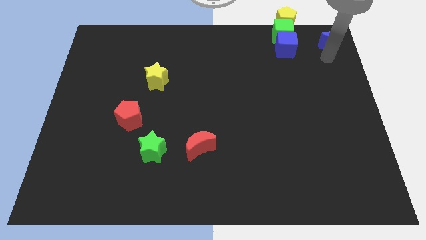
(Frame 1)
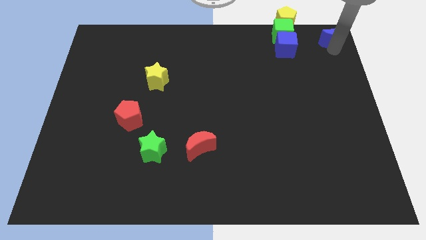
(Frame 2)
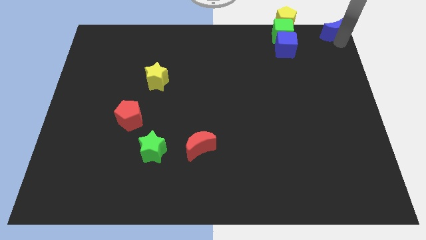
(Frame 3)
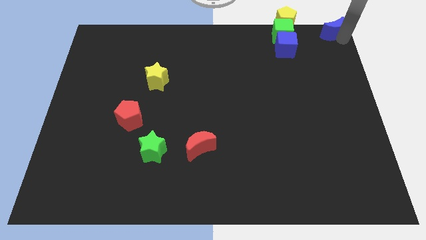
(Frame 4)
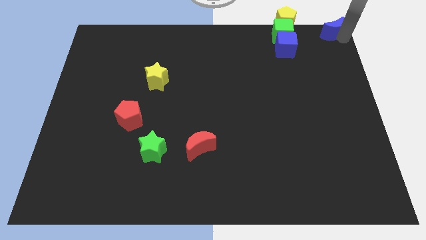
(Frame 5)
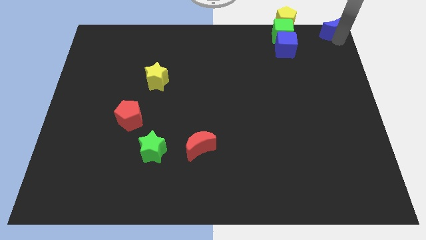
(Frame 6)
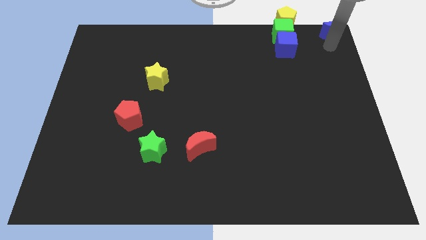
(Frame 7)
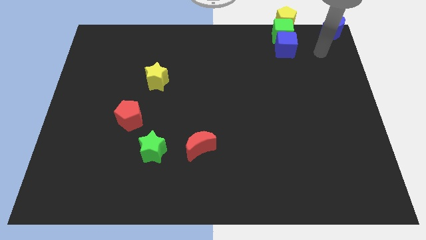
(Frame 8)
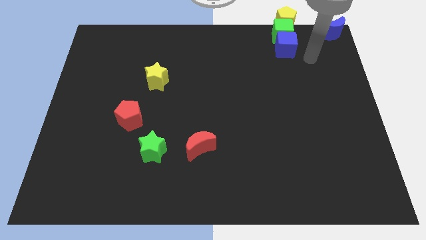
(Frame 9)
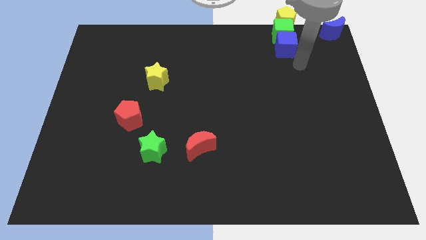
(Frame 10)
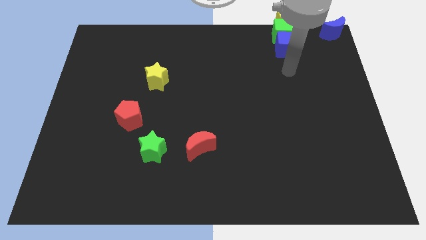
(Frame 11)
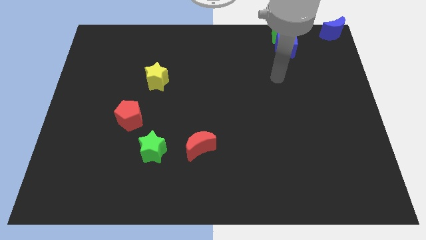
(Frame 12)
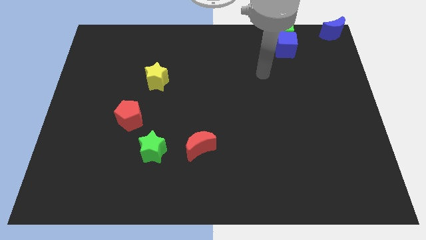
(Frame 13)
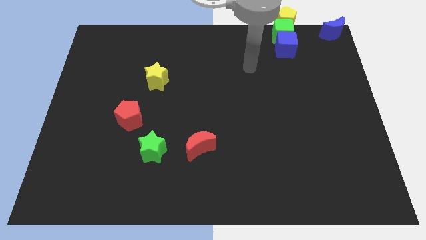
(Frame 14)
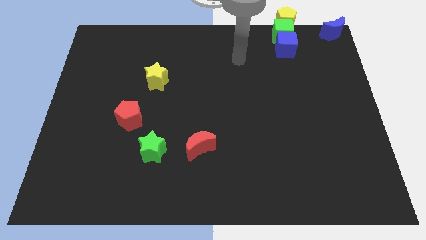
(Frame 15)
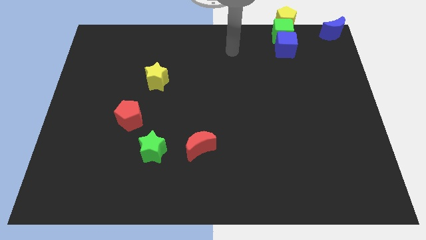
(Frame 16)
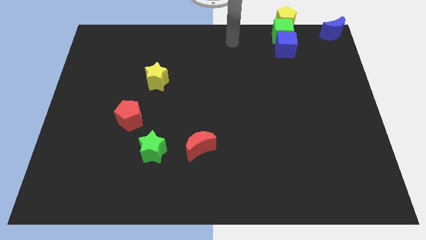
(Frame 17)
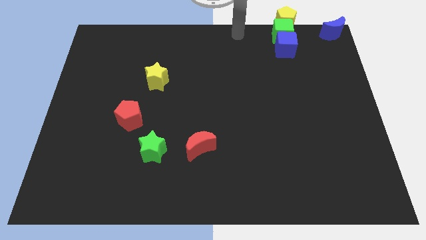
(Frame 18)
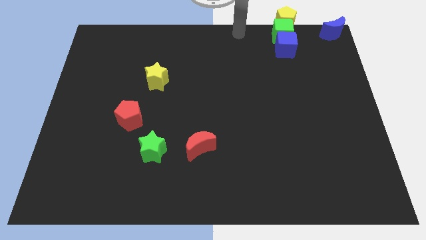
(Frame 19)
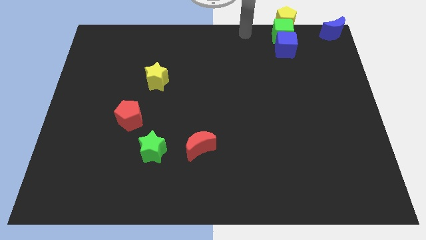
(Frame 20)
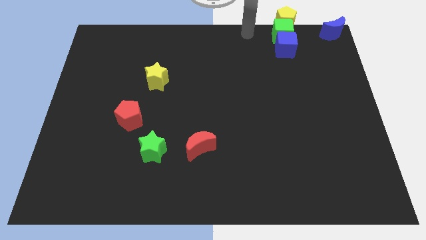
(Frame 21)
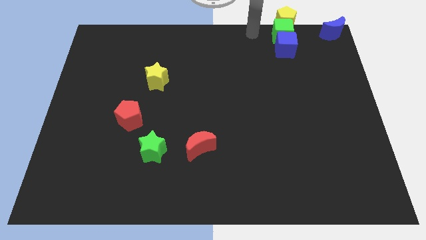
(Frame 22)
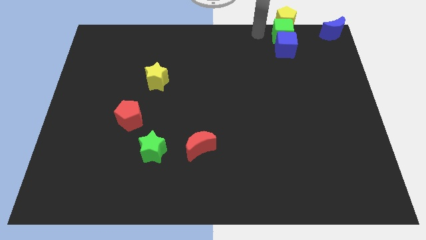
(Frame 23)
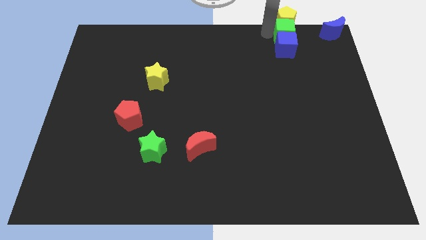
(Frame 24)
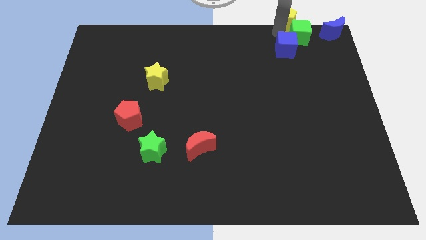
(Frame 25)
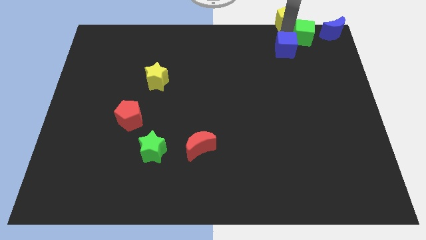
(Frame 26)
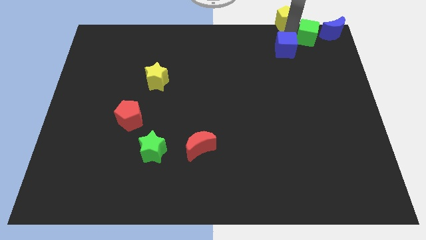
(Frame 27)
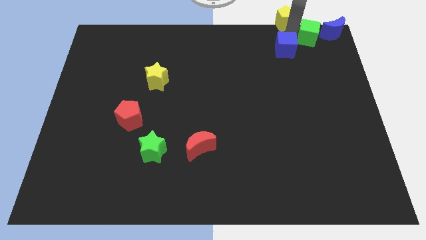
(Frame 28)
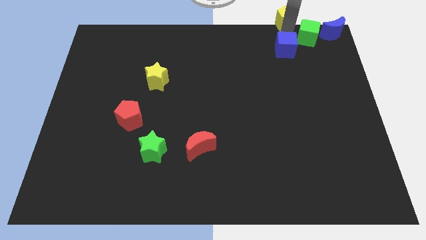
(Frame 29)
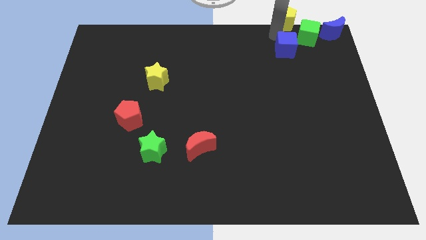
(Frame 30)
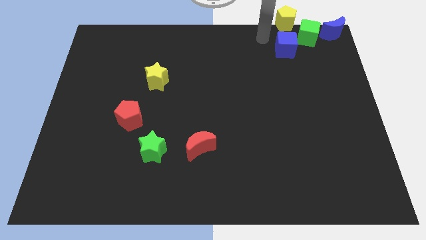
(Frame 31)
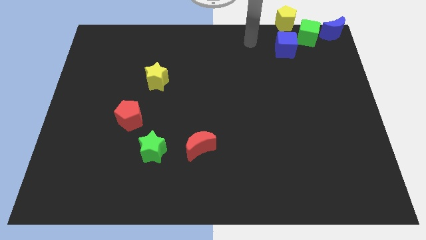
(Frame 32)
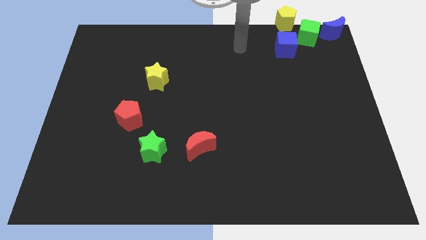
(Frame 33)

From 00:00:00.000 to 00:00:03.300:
slide the green cube slightly to the right

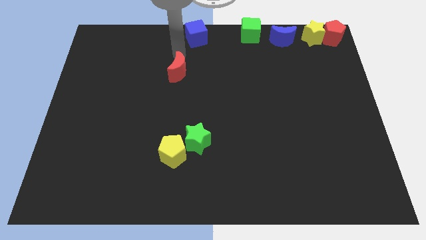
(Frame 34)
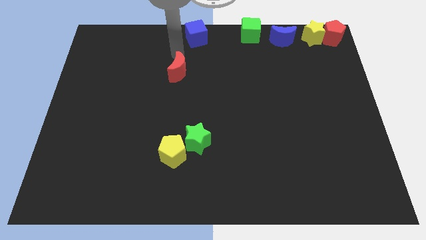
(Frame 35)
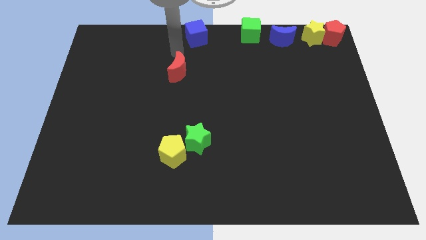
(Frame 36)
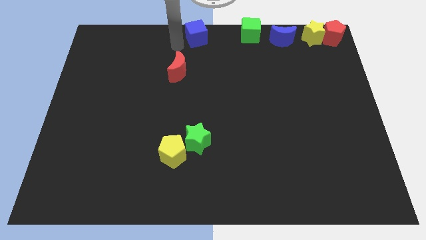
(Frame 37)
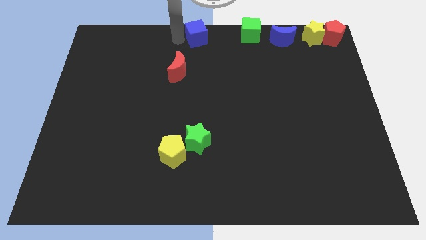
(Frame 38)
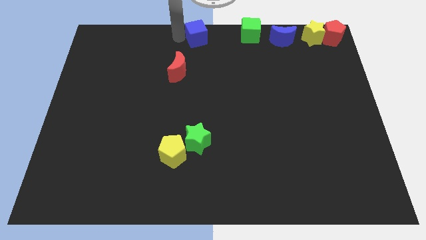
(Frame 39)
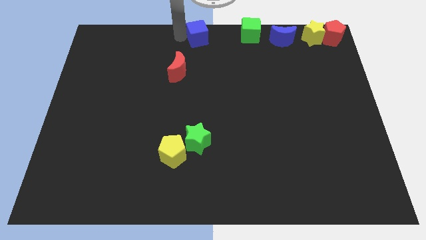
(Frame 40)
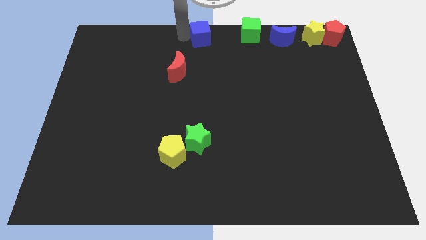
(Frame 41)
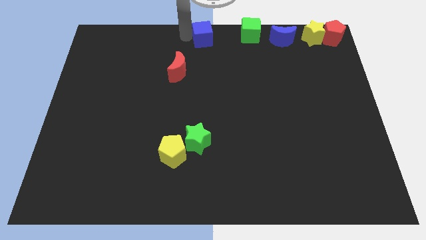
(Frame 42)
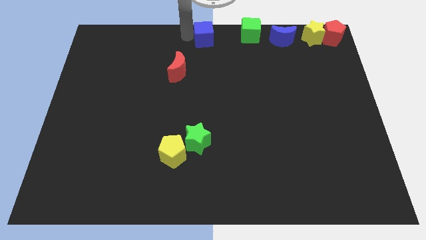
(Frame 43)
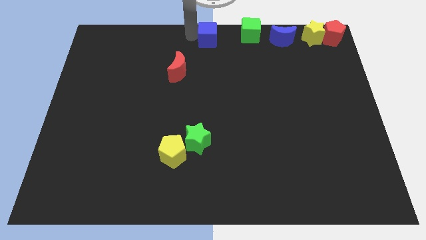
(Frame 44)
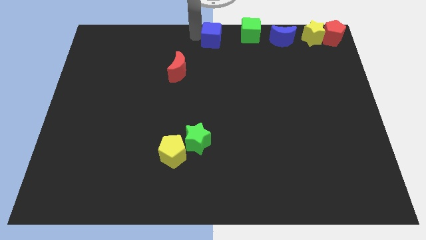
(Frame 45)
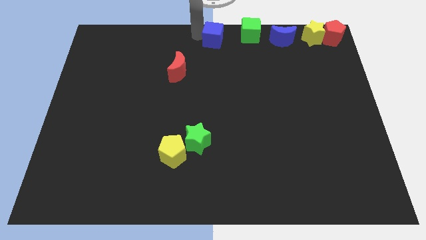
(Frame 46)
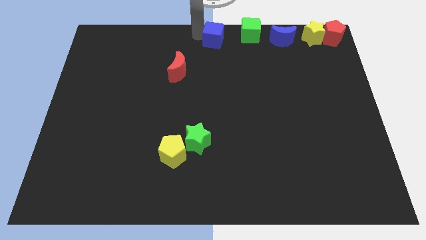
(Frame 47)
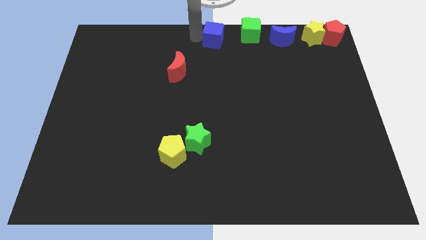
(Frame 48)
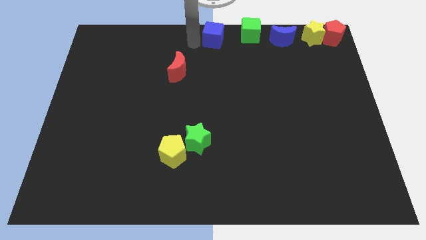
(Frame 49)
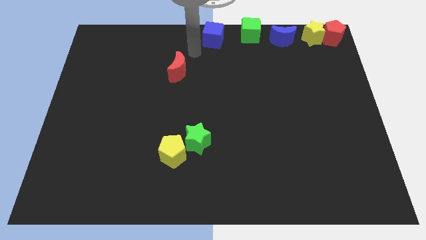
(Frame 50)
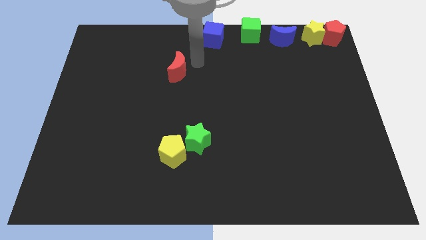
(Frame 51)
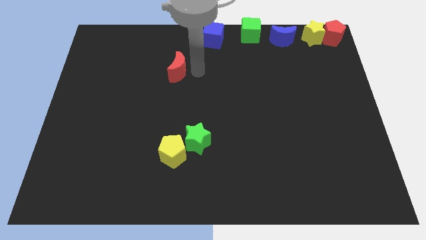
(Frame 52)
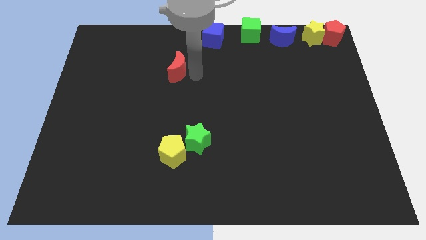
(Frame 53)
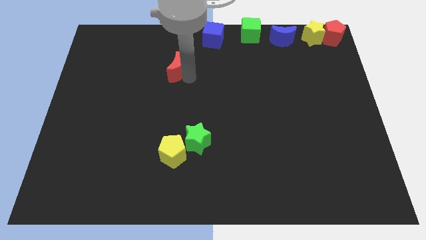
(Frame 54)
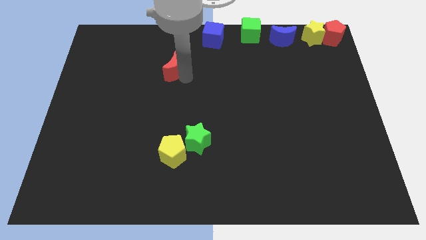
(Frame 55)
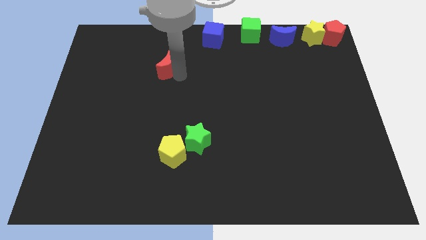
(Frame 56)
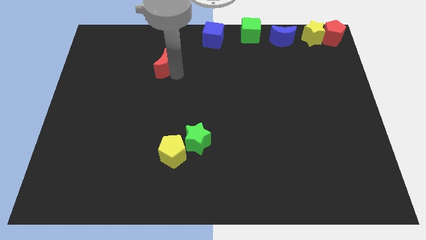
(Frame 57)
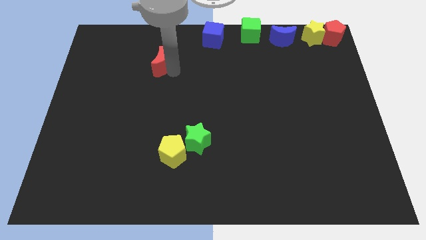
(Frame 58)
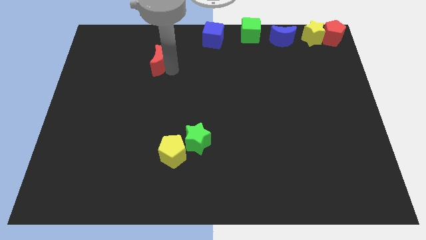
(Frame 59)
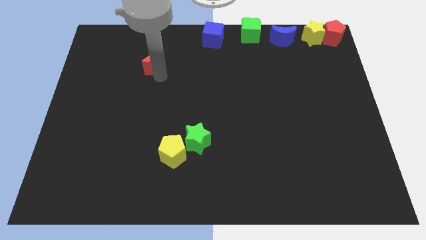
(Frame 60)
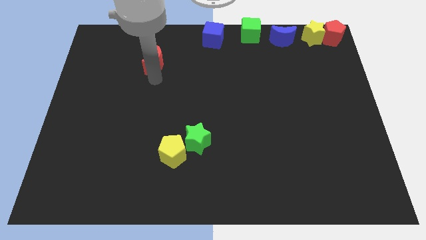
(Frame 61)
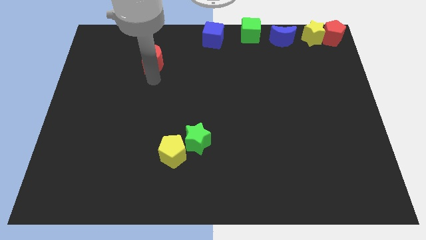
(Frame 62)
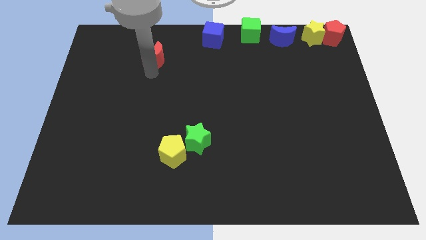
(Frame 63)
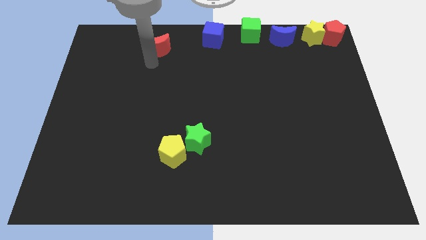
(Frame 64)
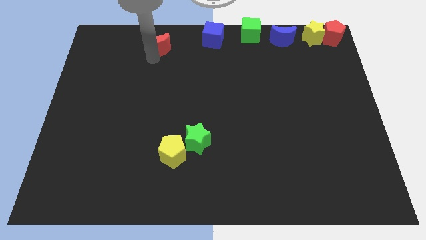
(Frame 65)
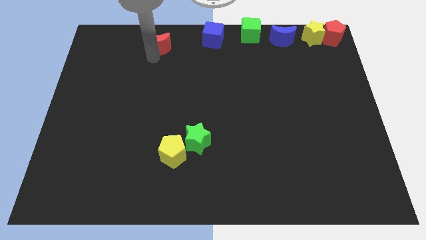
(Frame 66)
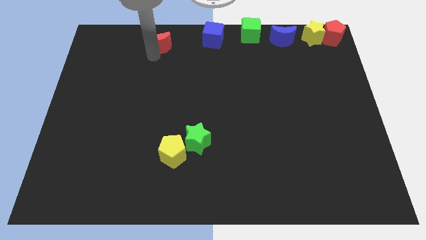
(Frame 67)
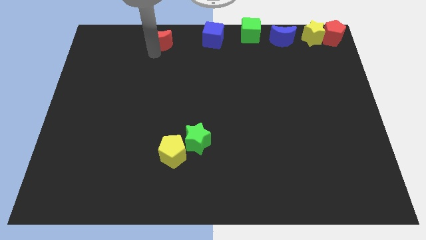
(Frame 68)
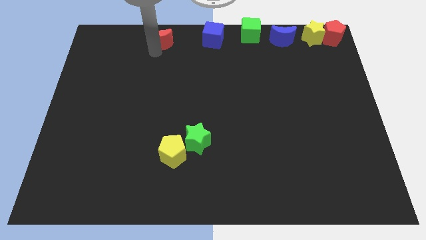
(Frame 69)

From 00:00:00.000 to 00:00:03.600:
place the red moon left to the blue cube

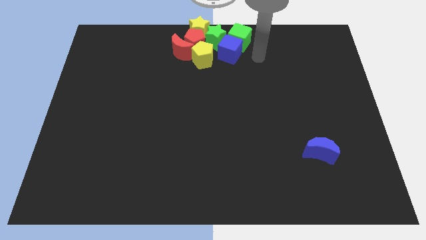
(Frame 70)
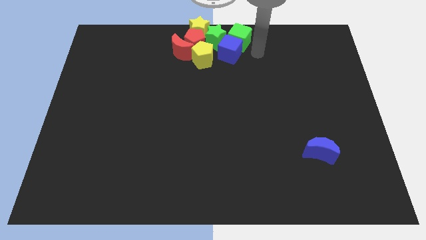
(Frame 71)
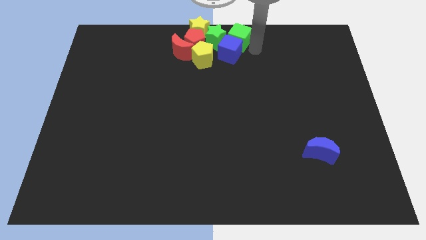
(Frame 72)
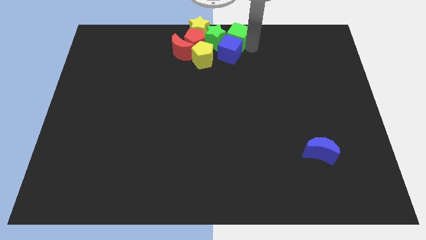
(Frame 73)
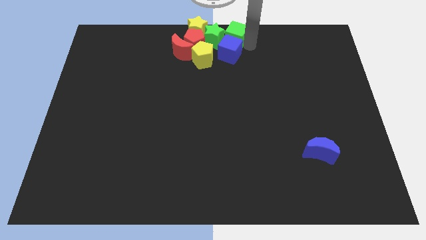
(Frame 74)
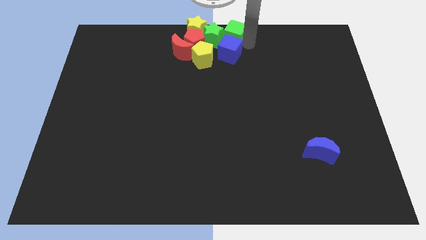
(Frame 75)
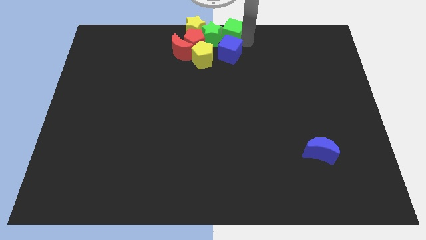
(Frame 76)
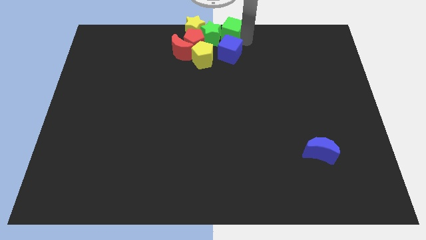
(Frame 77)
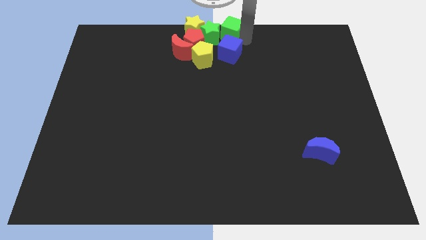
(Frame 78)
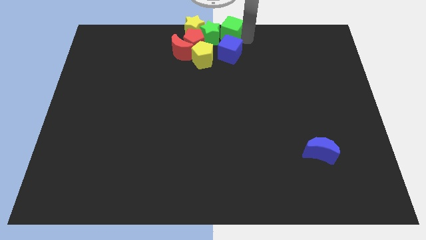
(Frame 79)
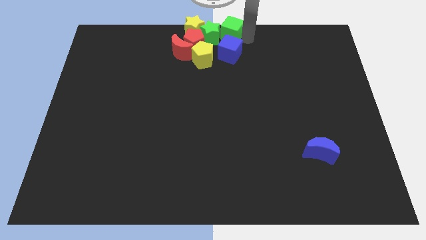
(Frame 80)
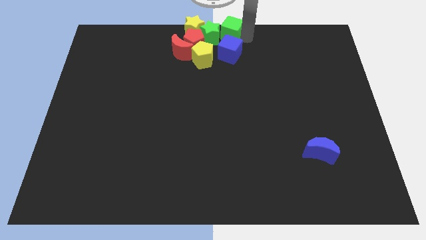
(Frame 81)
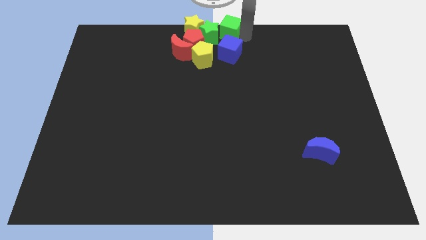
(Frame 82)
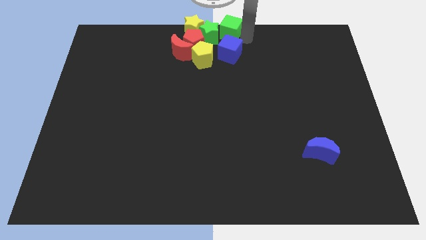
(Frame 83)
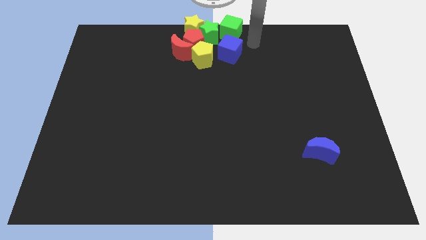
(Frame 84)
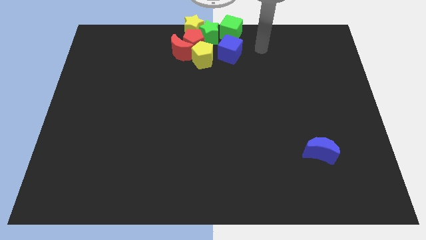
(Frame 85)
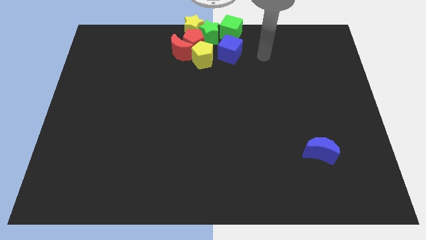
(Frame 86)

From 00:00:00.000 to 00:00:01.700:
separate the green cube from blue cube
